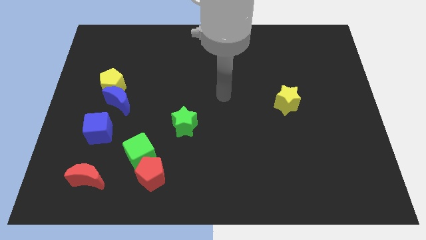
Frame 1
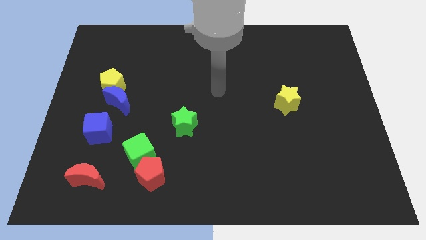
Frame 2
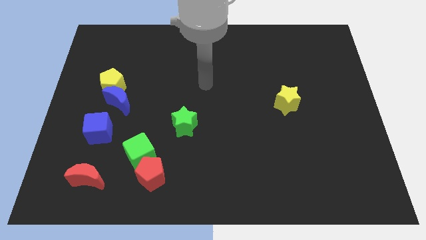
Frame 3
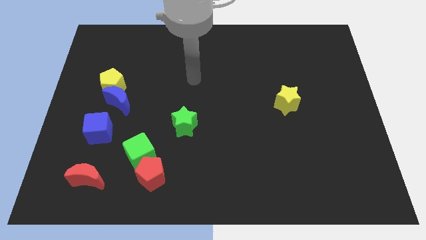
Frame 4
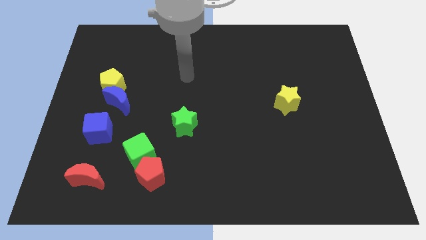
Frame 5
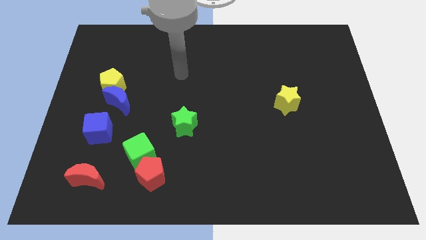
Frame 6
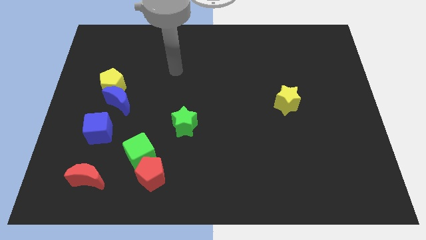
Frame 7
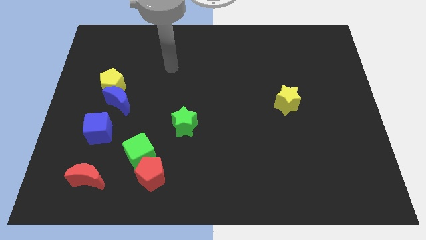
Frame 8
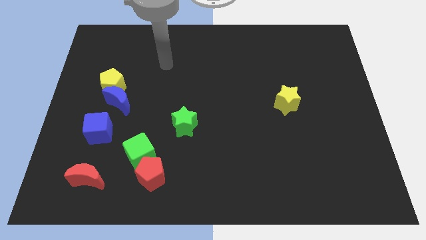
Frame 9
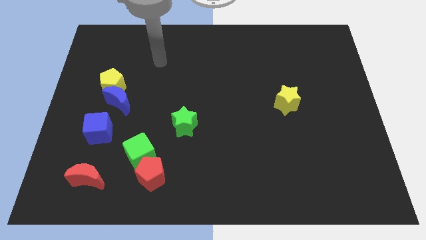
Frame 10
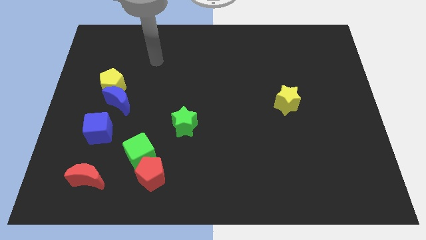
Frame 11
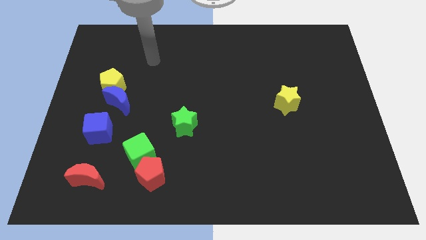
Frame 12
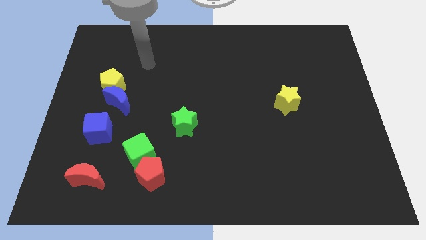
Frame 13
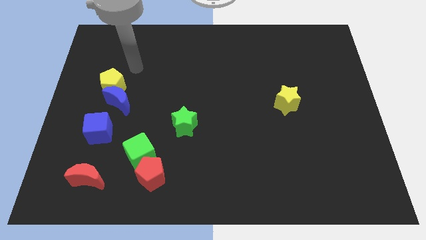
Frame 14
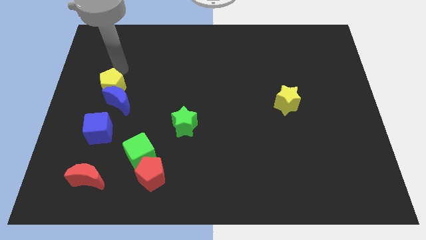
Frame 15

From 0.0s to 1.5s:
move arm above yellow pentagon

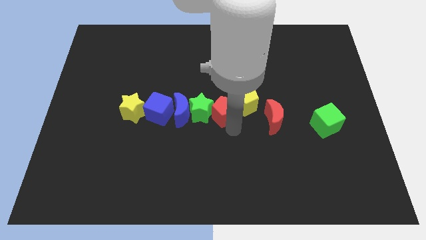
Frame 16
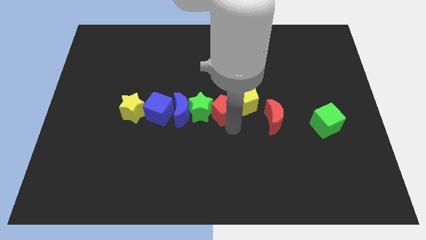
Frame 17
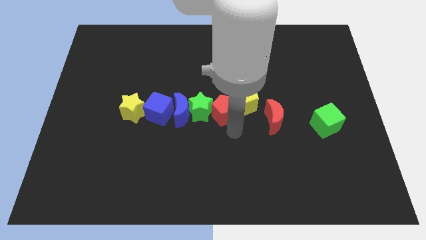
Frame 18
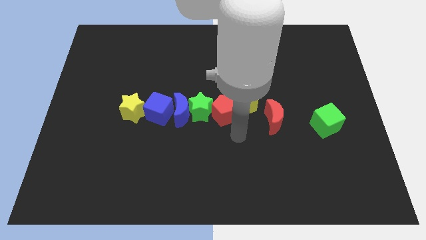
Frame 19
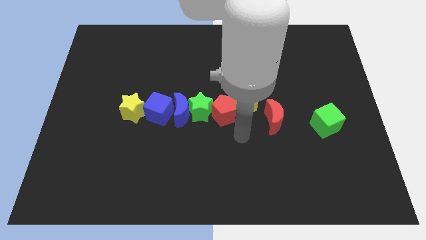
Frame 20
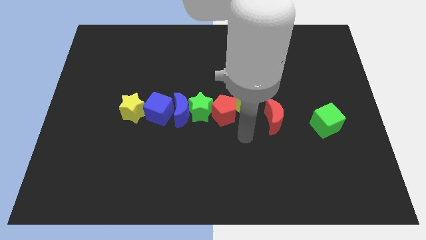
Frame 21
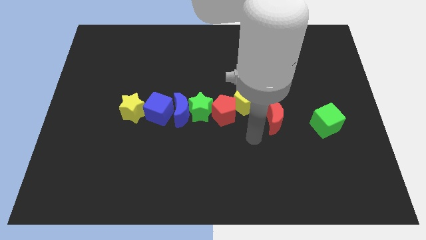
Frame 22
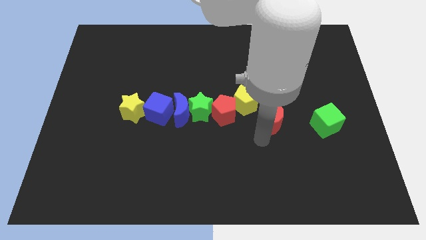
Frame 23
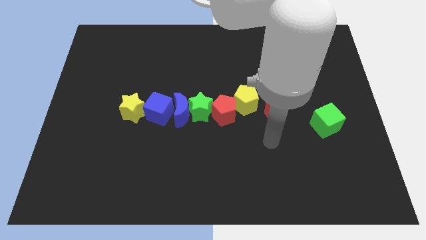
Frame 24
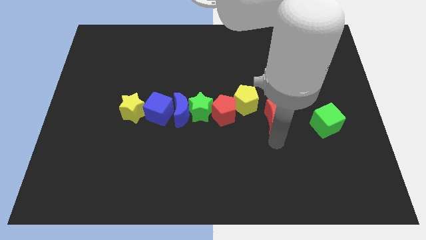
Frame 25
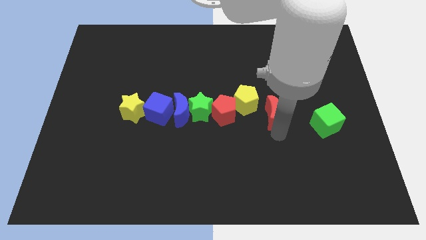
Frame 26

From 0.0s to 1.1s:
move your arm away from red pentagon

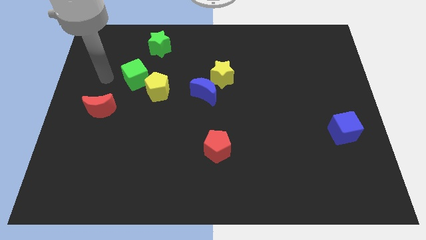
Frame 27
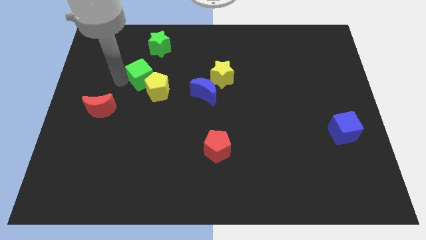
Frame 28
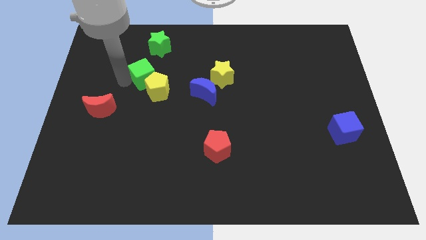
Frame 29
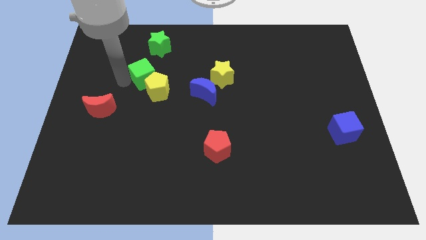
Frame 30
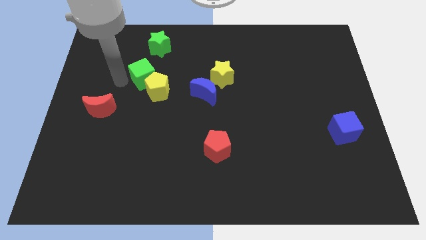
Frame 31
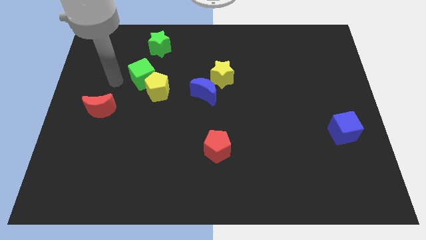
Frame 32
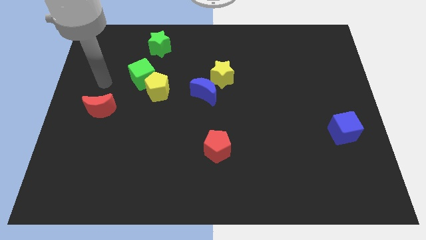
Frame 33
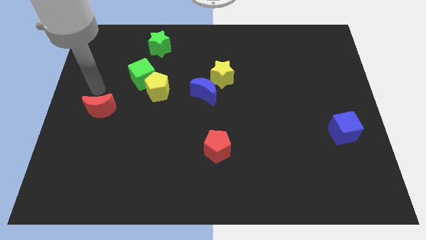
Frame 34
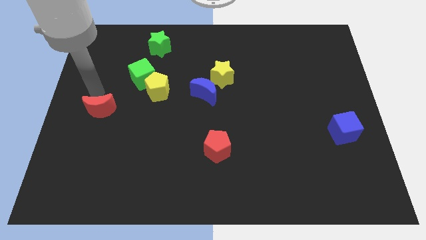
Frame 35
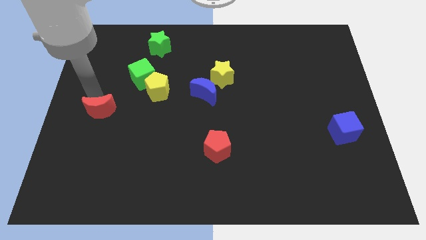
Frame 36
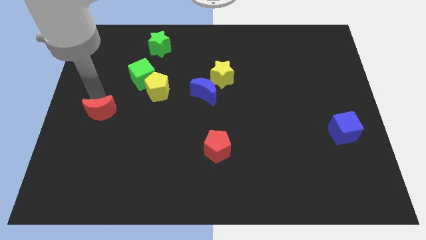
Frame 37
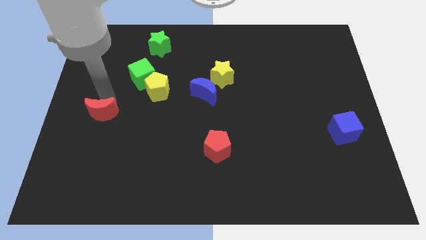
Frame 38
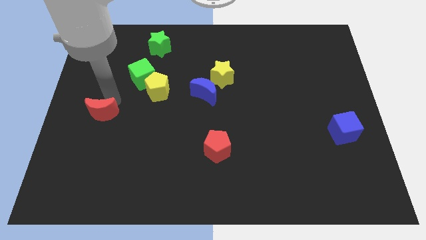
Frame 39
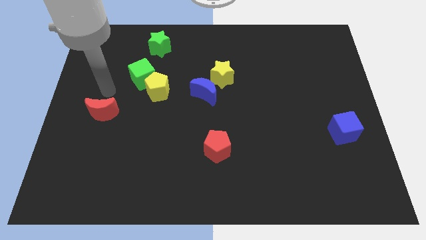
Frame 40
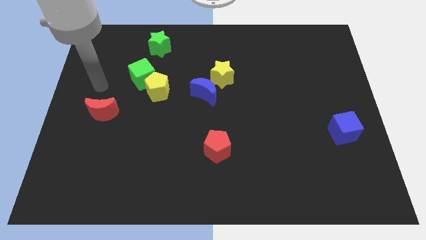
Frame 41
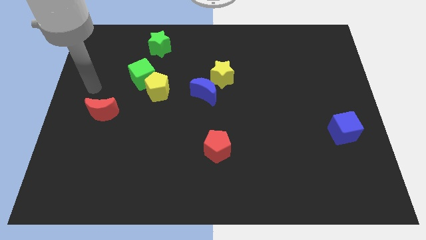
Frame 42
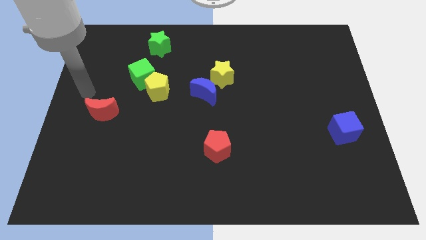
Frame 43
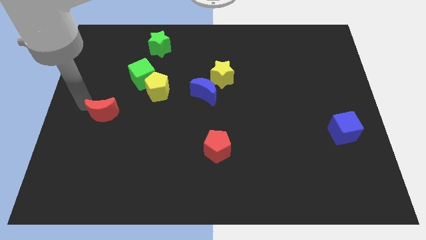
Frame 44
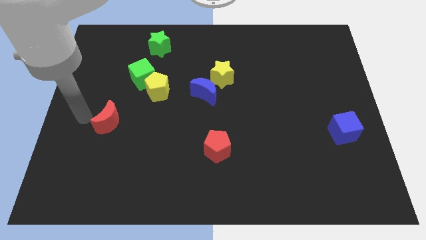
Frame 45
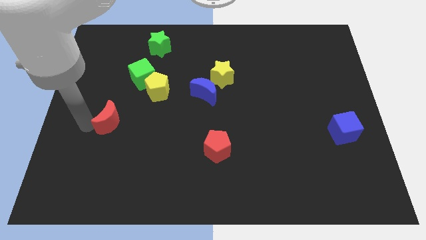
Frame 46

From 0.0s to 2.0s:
move the red crescent diagonally to the bottom left of the yellow pentagon

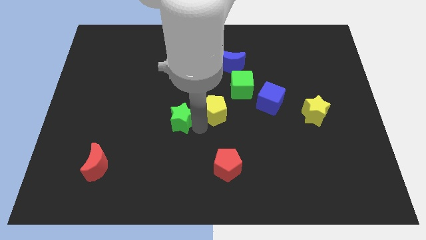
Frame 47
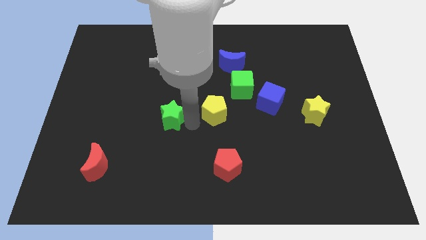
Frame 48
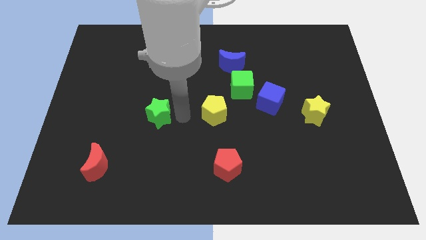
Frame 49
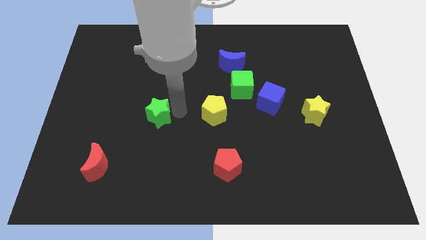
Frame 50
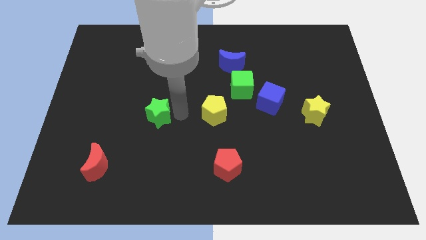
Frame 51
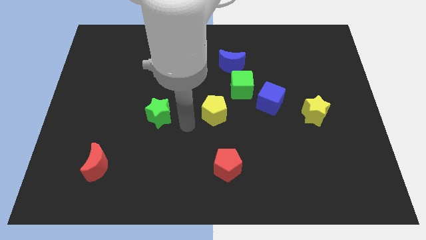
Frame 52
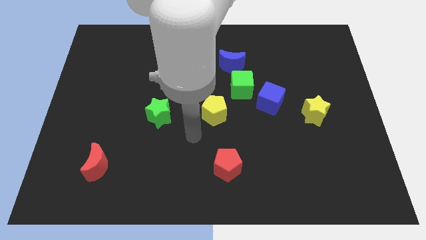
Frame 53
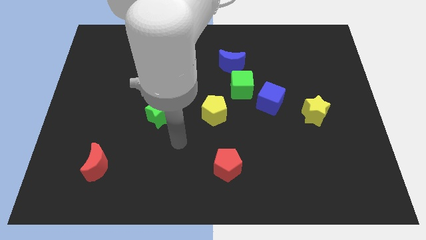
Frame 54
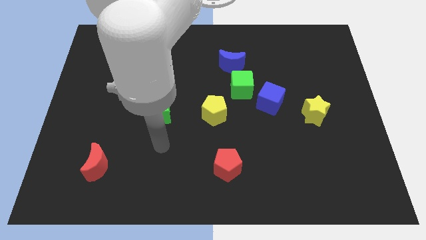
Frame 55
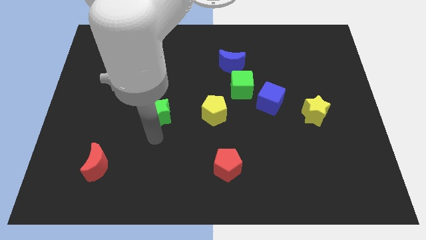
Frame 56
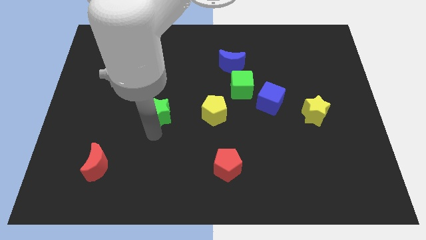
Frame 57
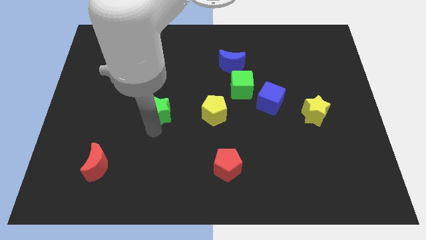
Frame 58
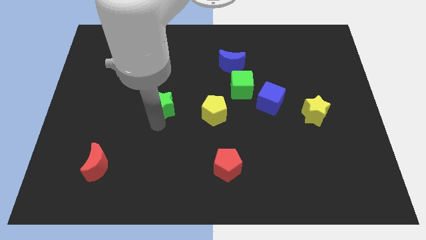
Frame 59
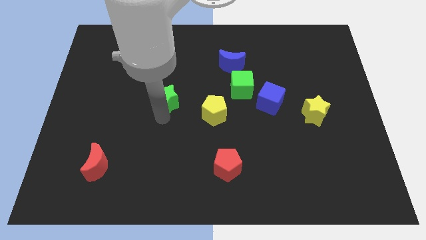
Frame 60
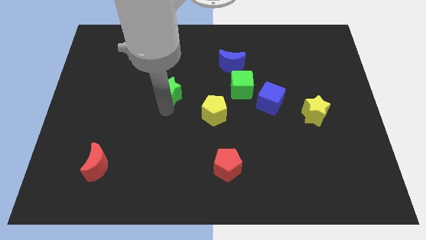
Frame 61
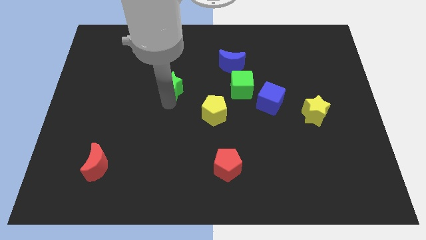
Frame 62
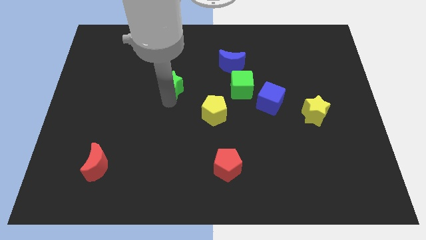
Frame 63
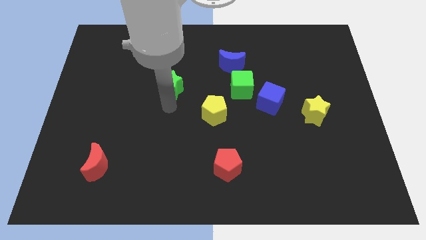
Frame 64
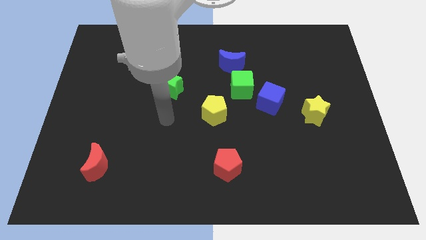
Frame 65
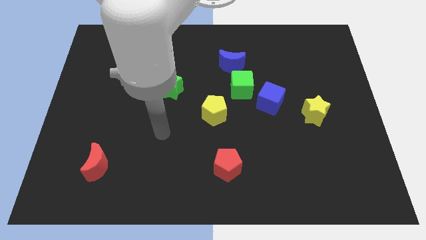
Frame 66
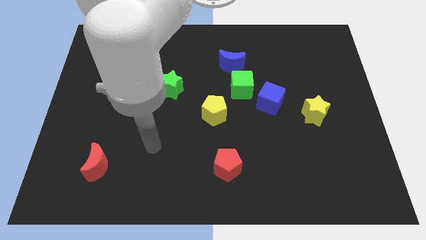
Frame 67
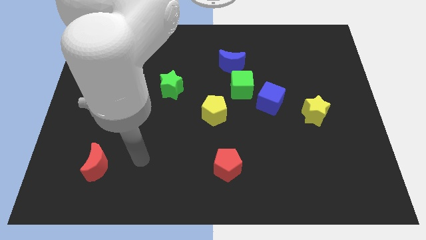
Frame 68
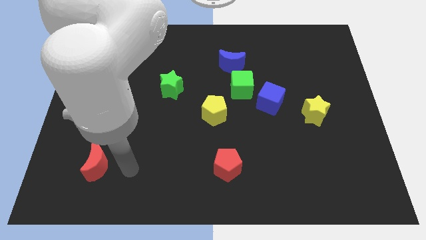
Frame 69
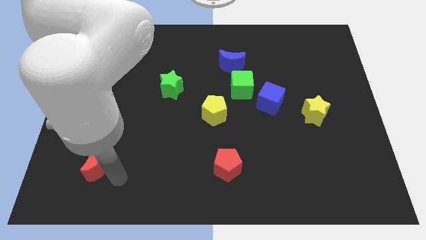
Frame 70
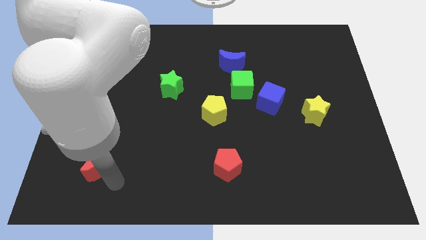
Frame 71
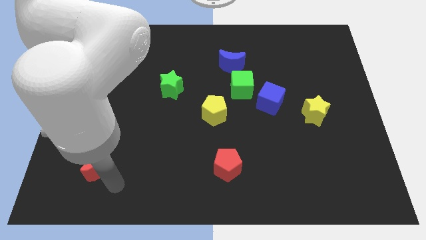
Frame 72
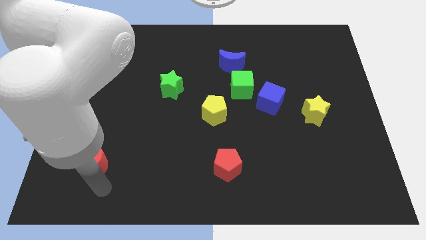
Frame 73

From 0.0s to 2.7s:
push the green star left to the green cube

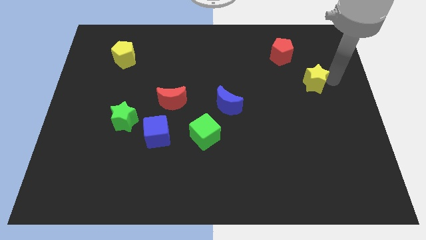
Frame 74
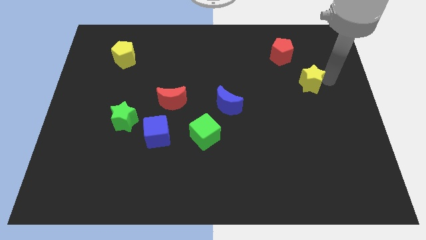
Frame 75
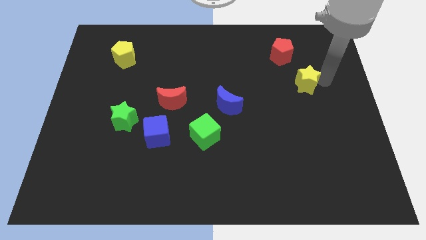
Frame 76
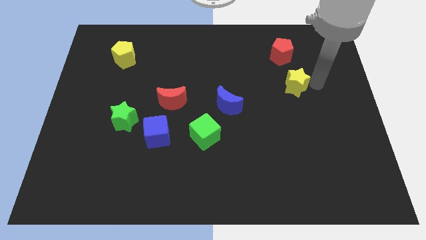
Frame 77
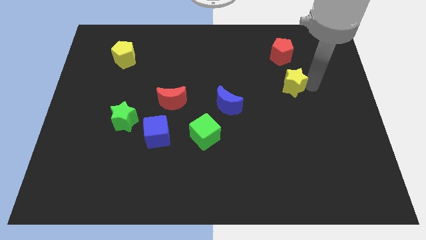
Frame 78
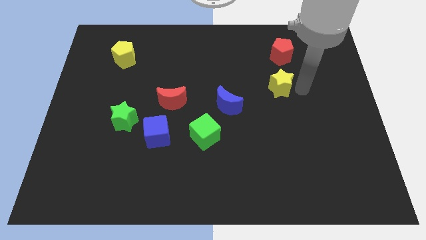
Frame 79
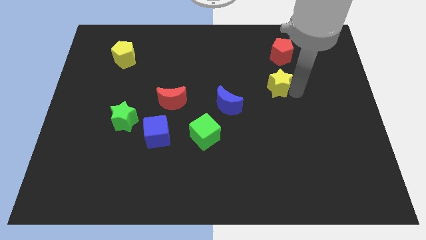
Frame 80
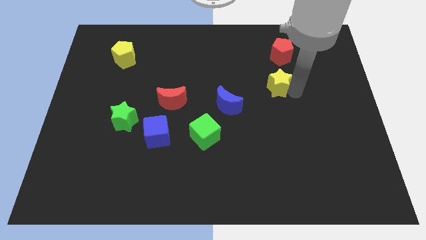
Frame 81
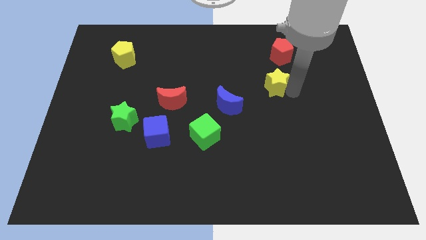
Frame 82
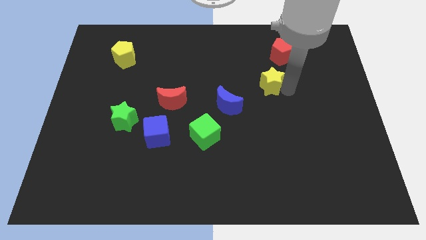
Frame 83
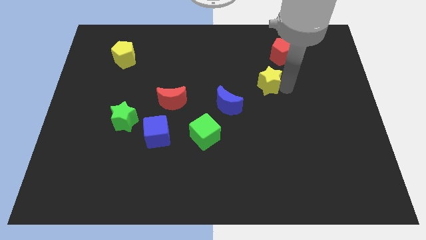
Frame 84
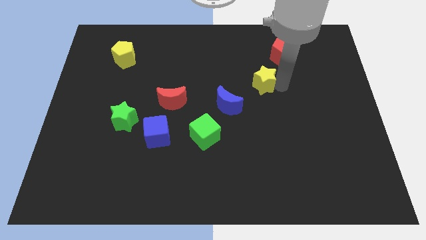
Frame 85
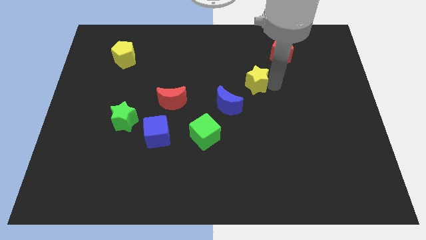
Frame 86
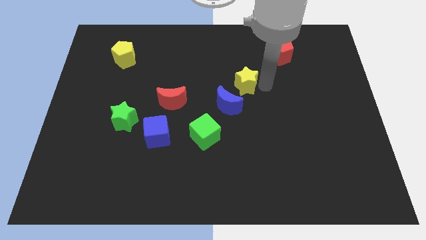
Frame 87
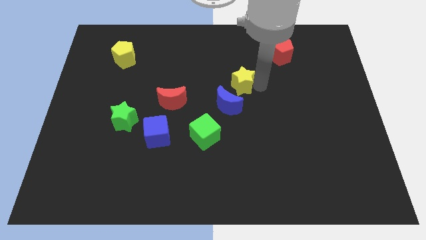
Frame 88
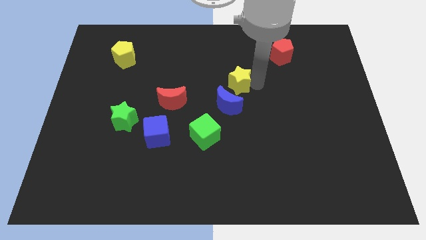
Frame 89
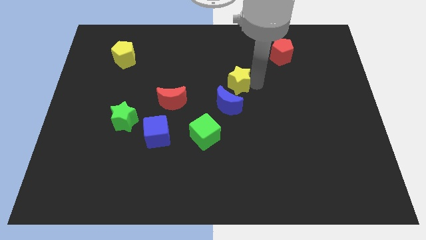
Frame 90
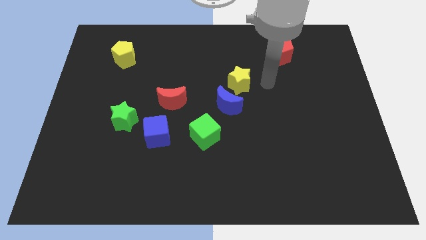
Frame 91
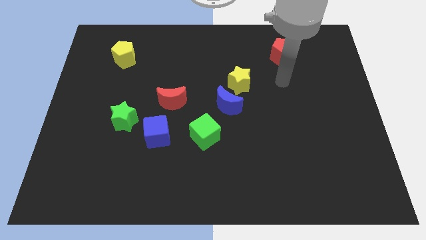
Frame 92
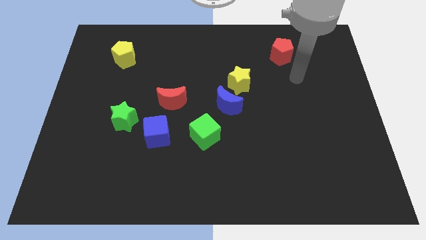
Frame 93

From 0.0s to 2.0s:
slide the yellow star above the blue moon
